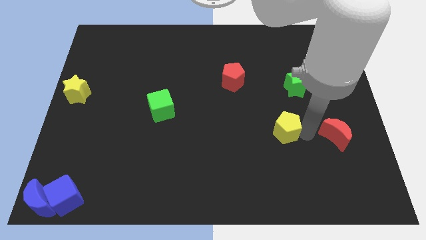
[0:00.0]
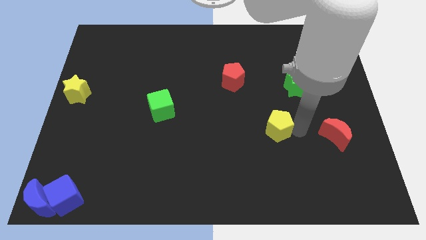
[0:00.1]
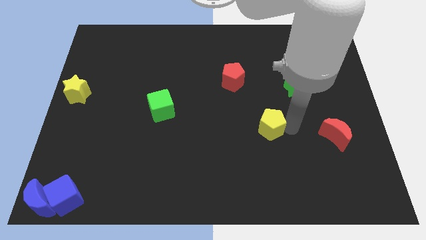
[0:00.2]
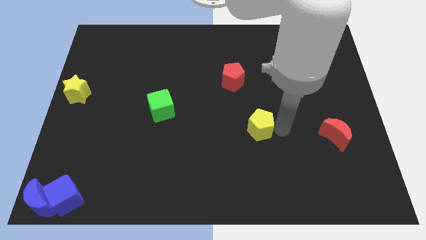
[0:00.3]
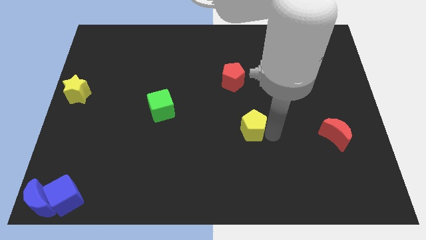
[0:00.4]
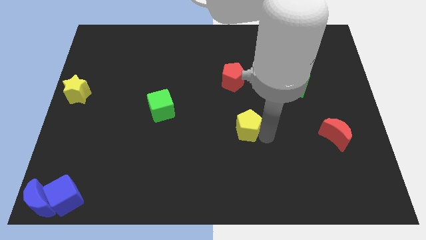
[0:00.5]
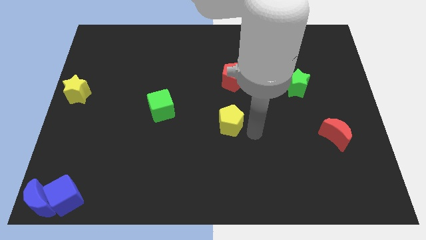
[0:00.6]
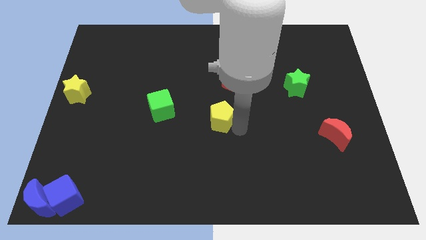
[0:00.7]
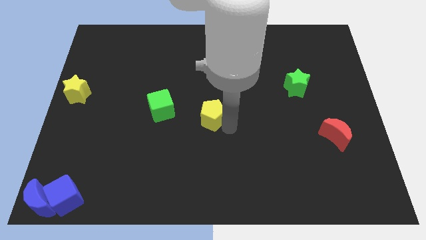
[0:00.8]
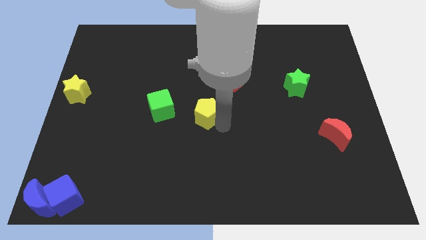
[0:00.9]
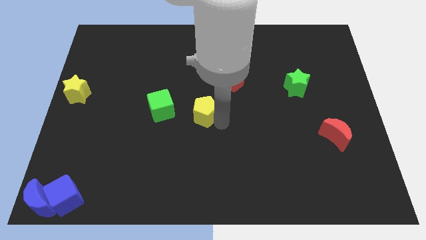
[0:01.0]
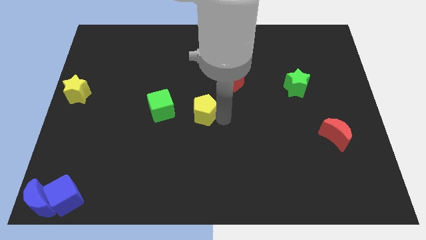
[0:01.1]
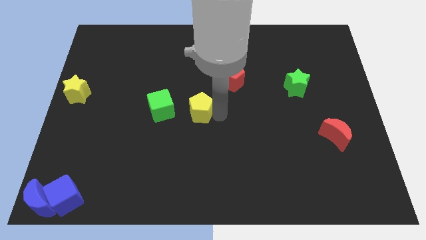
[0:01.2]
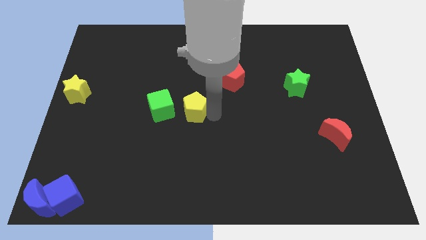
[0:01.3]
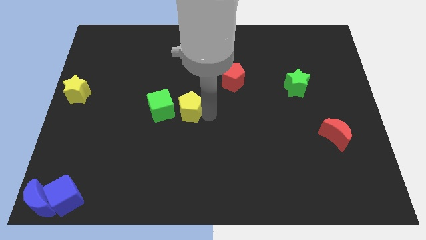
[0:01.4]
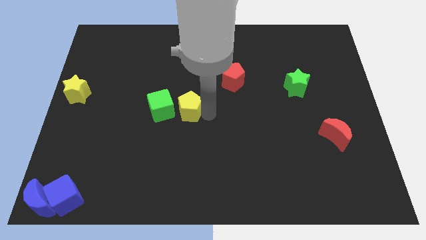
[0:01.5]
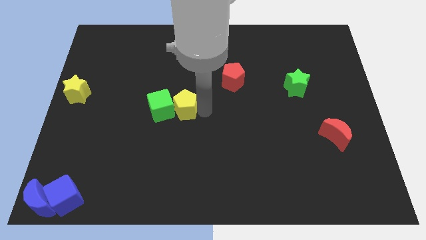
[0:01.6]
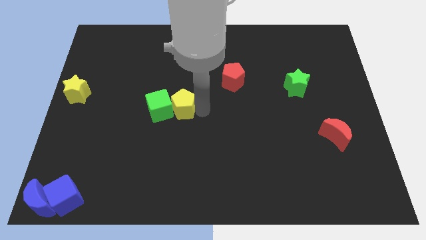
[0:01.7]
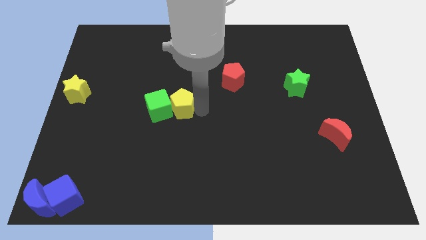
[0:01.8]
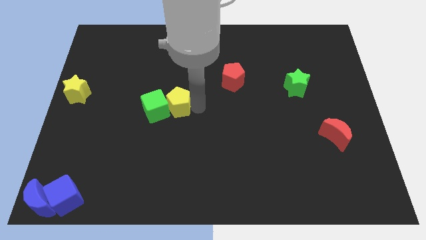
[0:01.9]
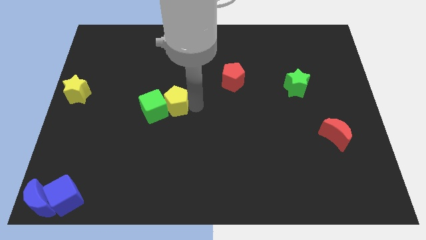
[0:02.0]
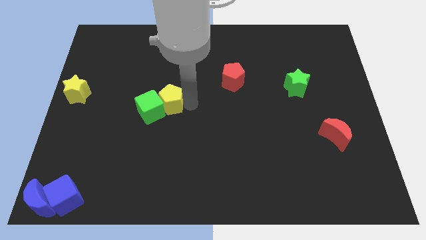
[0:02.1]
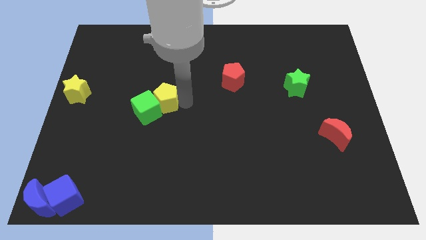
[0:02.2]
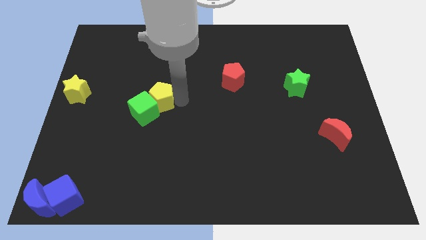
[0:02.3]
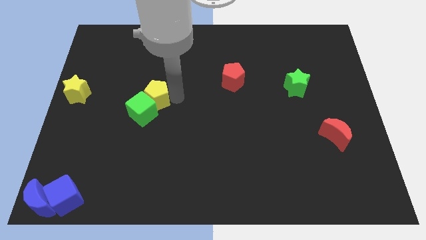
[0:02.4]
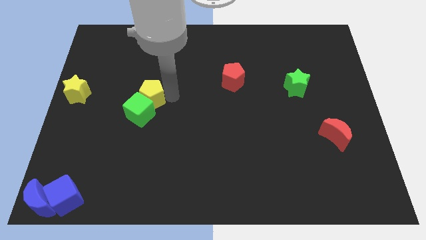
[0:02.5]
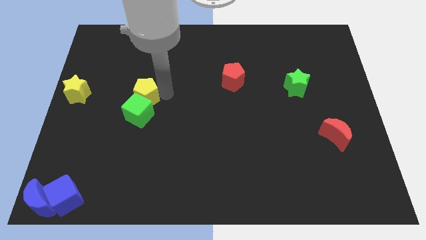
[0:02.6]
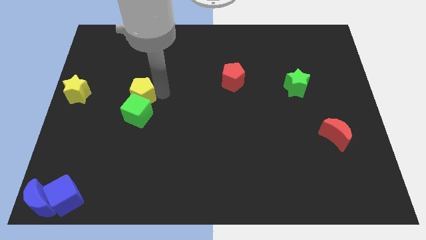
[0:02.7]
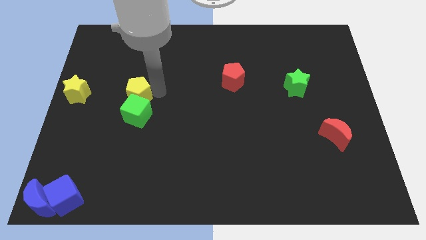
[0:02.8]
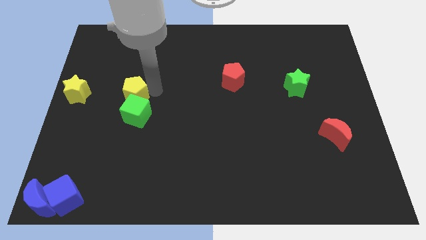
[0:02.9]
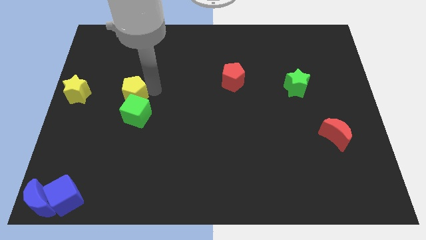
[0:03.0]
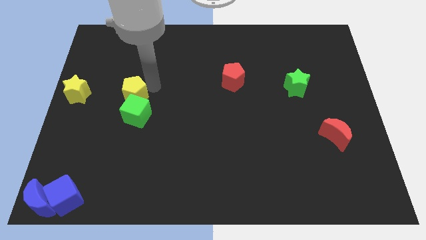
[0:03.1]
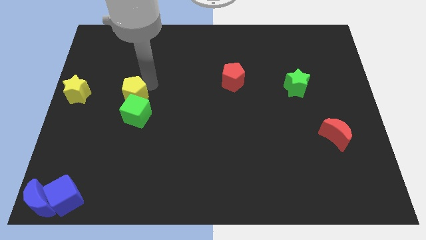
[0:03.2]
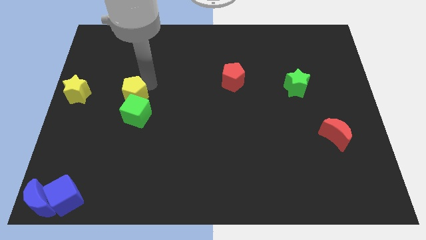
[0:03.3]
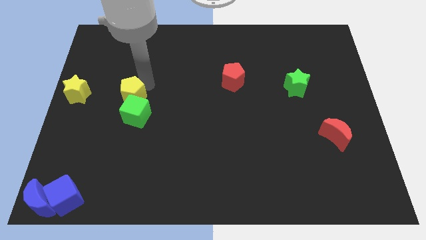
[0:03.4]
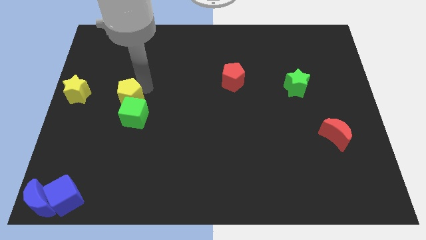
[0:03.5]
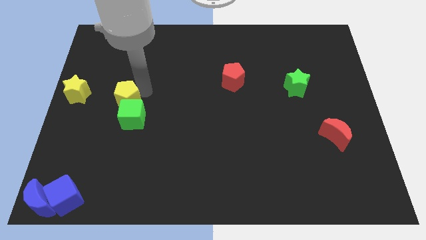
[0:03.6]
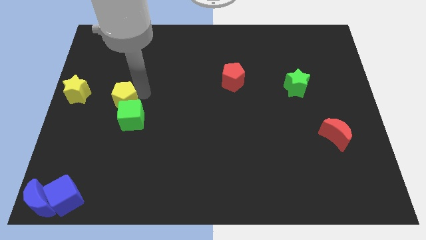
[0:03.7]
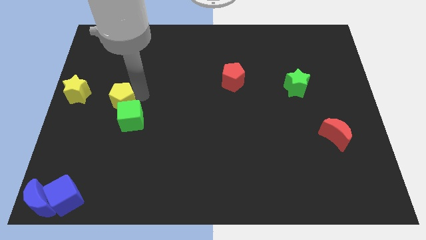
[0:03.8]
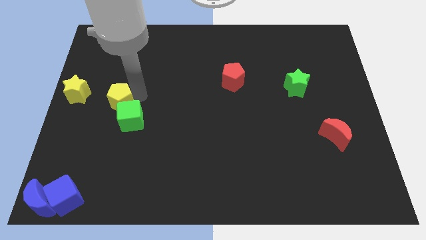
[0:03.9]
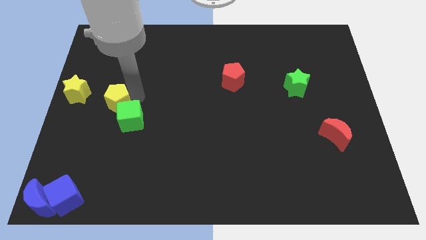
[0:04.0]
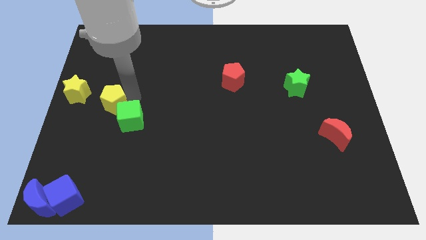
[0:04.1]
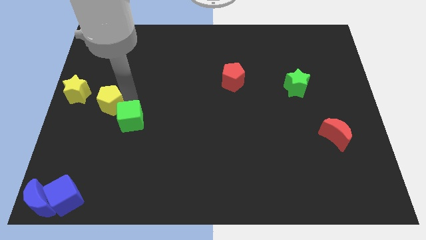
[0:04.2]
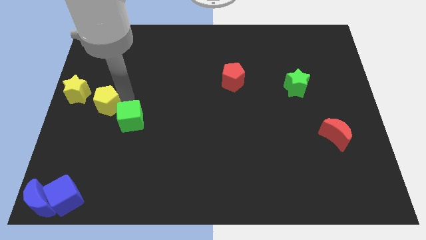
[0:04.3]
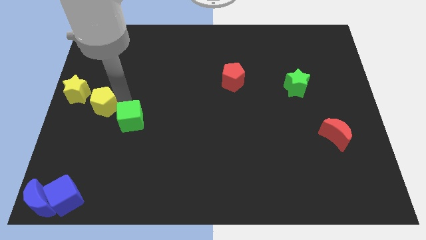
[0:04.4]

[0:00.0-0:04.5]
place yellow pentagon diagonally in between green cube and yellow star

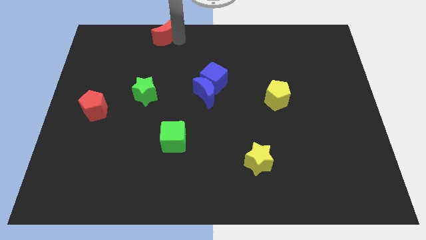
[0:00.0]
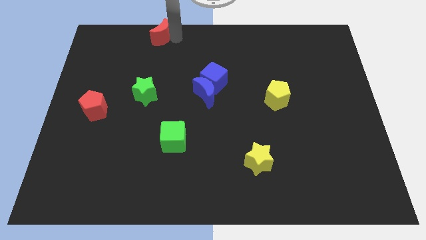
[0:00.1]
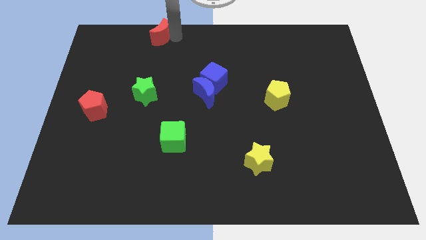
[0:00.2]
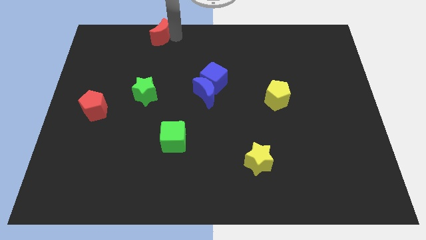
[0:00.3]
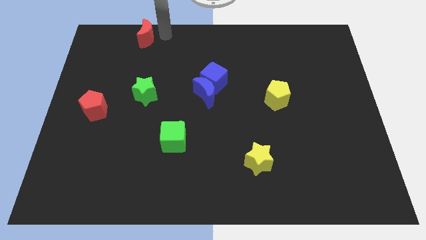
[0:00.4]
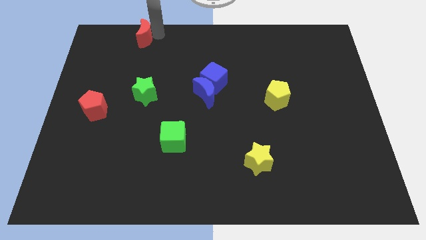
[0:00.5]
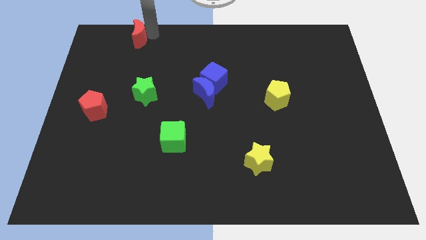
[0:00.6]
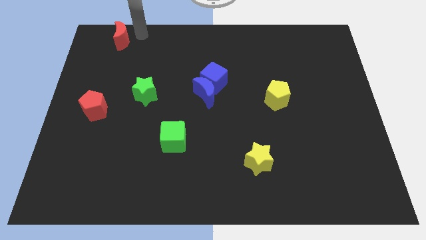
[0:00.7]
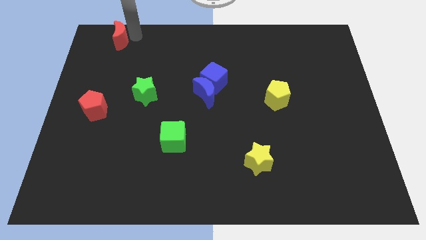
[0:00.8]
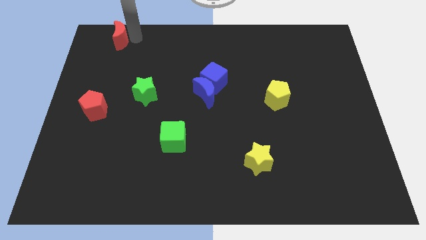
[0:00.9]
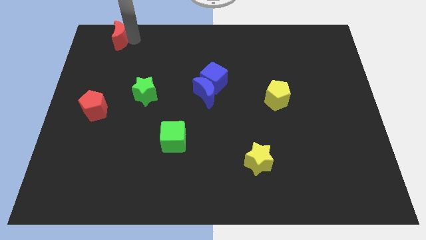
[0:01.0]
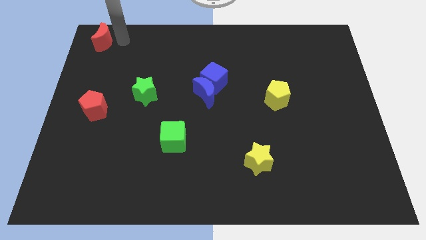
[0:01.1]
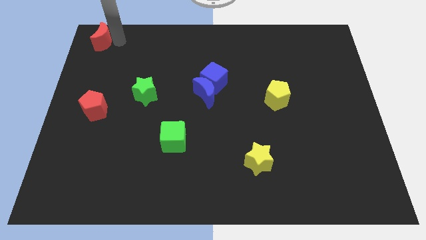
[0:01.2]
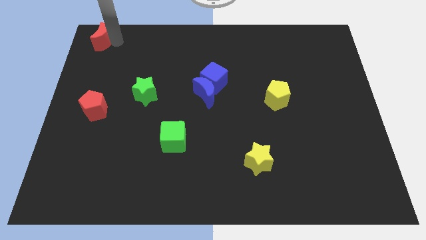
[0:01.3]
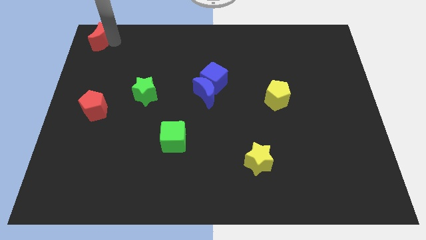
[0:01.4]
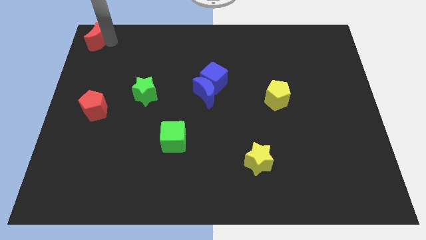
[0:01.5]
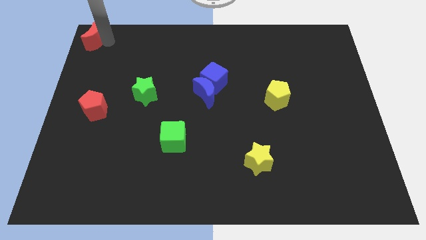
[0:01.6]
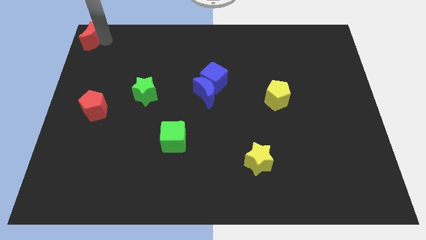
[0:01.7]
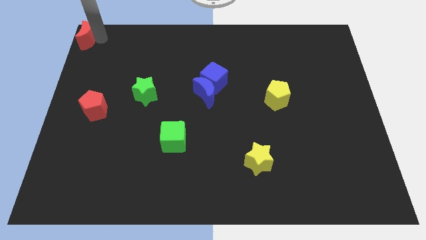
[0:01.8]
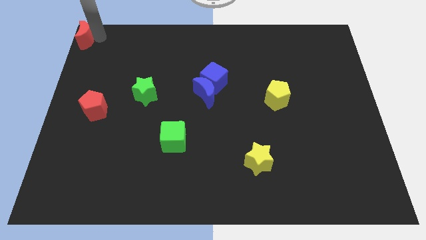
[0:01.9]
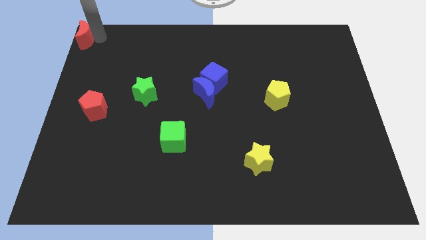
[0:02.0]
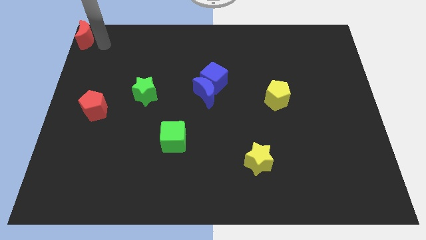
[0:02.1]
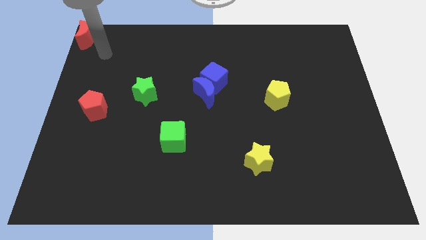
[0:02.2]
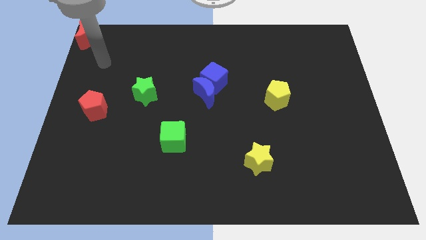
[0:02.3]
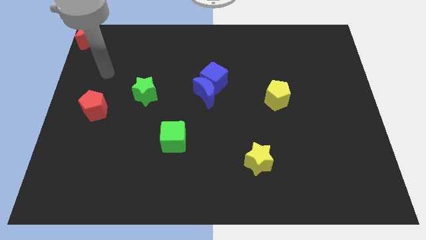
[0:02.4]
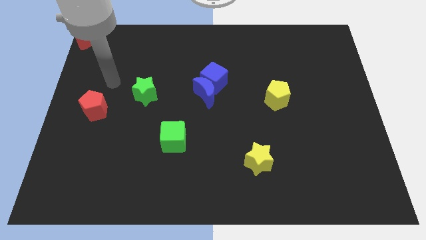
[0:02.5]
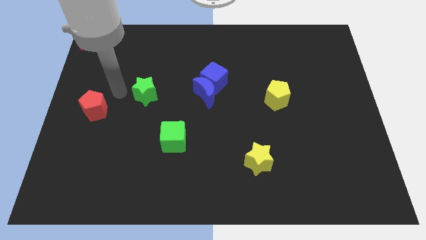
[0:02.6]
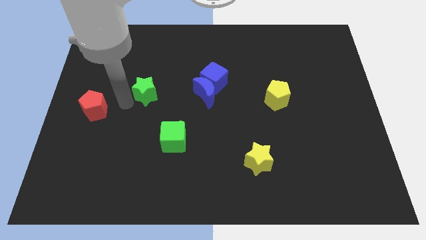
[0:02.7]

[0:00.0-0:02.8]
move the red moon to the top left

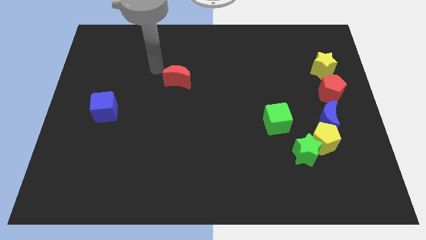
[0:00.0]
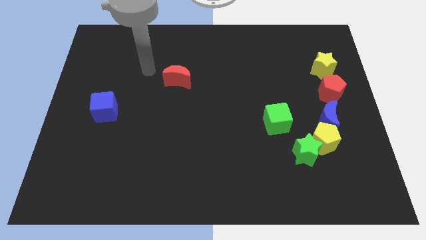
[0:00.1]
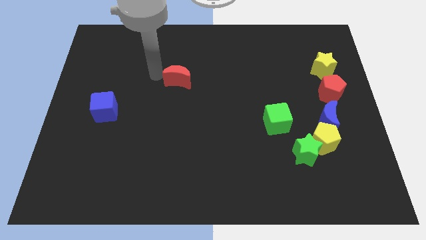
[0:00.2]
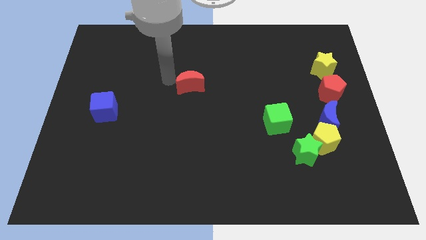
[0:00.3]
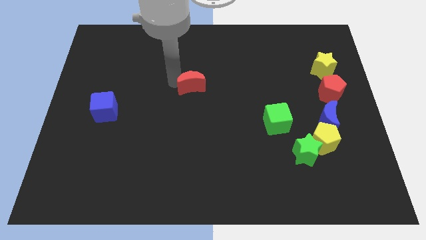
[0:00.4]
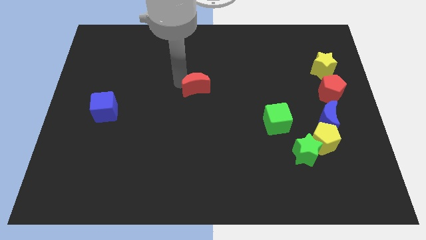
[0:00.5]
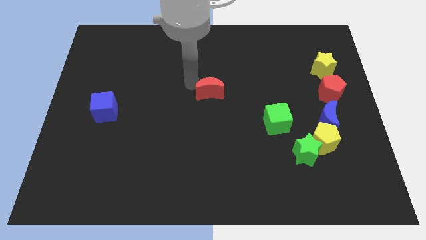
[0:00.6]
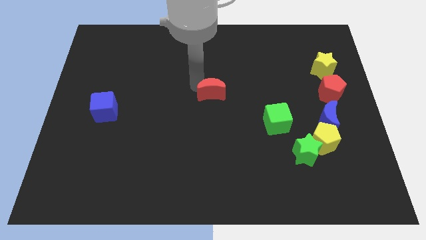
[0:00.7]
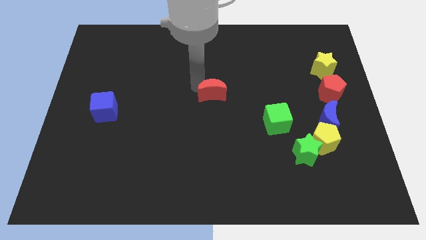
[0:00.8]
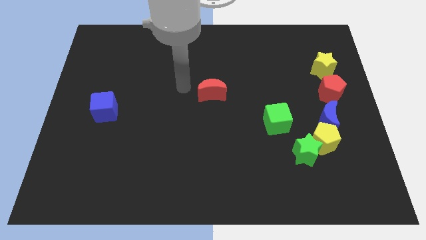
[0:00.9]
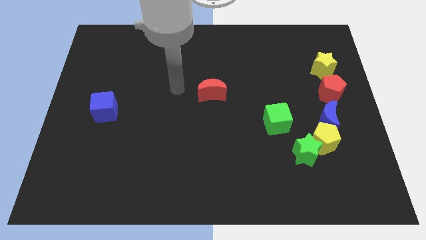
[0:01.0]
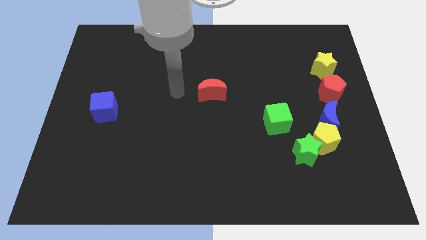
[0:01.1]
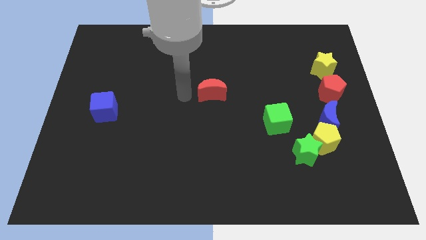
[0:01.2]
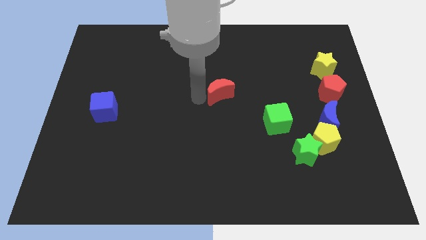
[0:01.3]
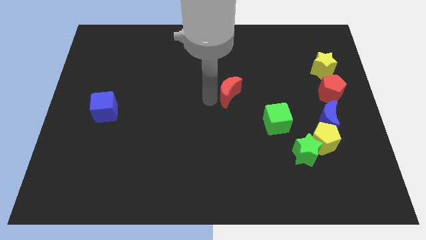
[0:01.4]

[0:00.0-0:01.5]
place the red crescent in center of the board
